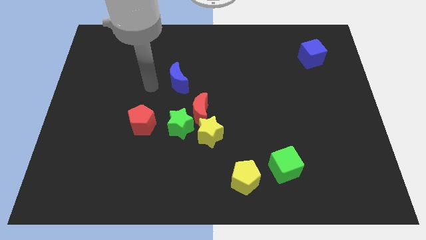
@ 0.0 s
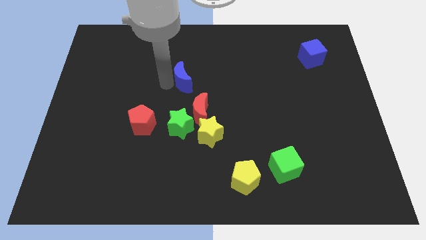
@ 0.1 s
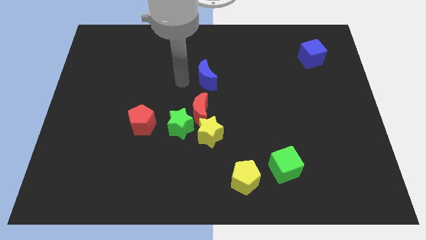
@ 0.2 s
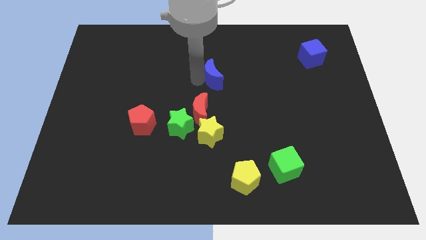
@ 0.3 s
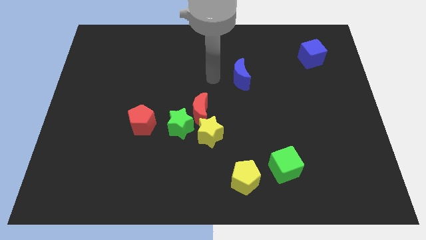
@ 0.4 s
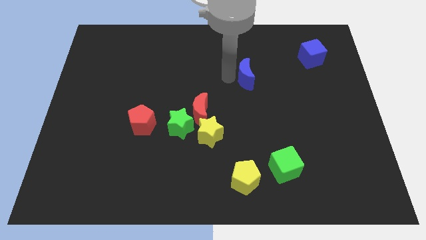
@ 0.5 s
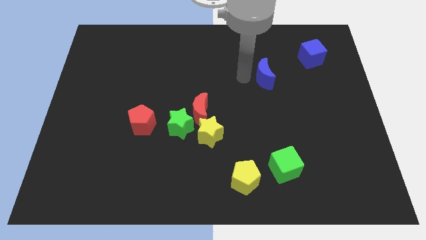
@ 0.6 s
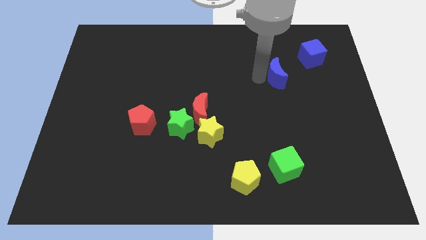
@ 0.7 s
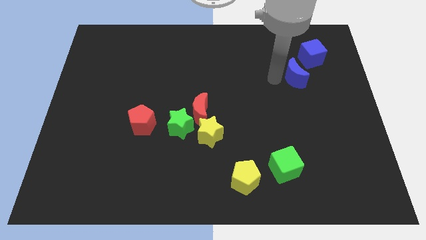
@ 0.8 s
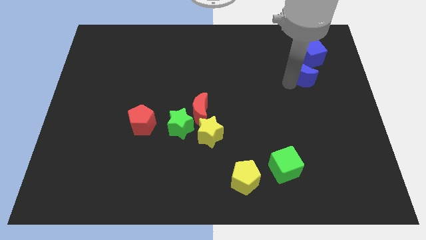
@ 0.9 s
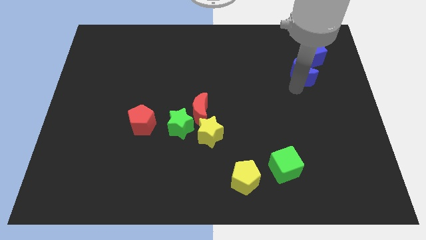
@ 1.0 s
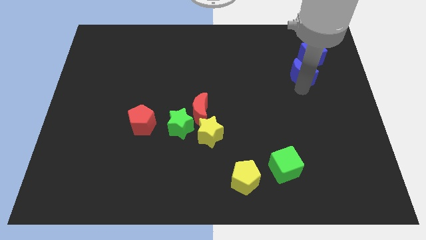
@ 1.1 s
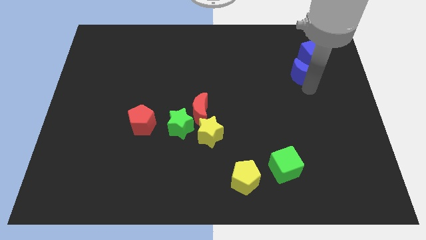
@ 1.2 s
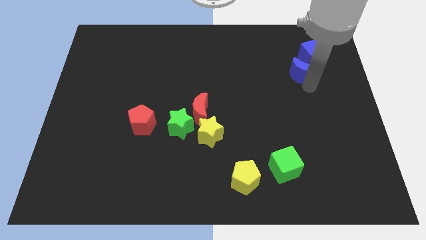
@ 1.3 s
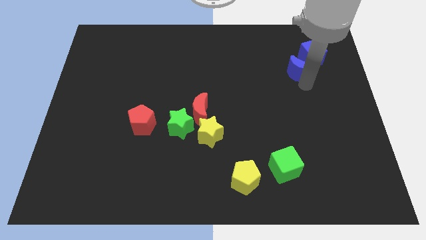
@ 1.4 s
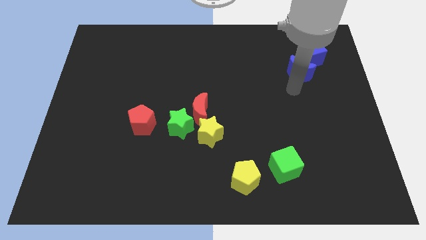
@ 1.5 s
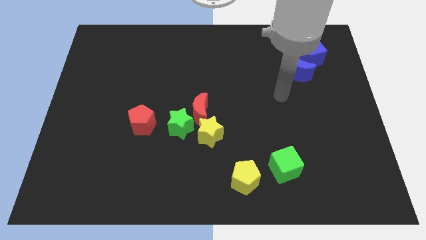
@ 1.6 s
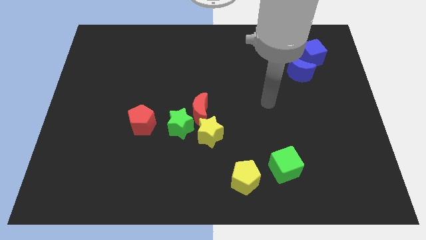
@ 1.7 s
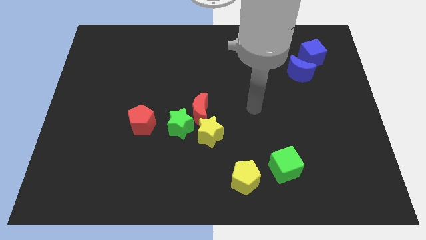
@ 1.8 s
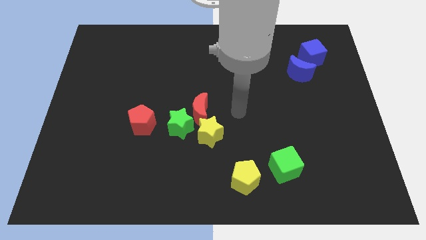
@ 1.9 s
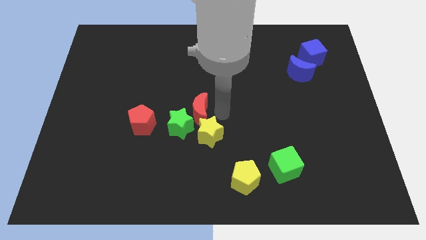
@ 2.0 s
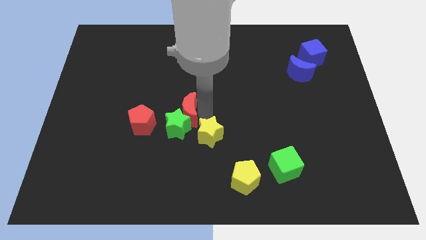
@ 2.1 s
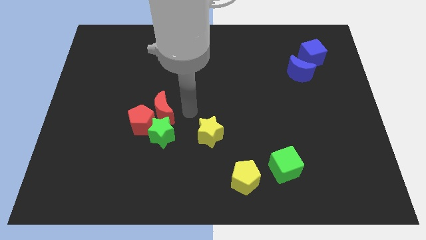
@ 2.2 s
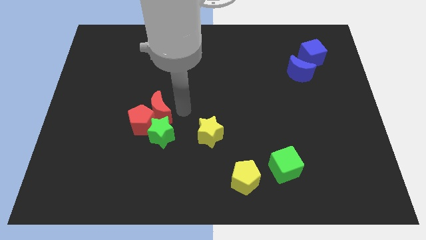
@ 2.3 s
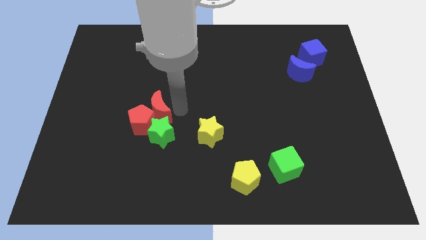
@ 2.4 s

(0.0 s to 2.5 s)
push blue moon in to blue cube

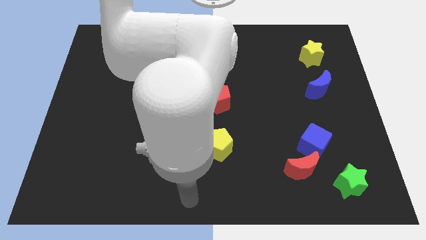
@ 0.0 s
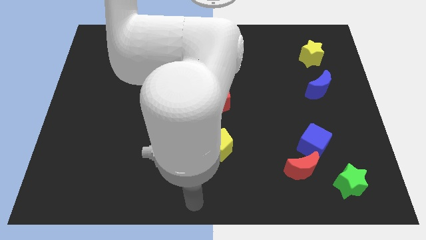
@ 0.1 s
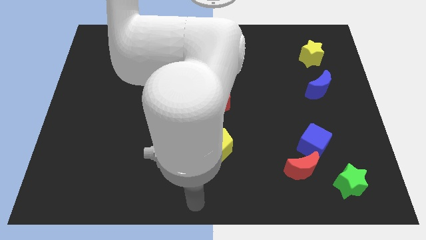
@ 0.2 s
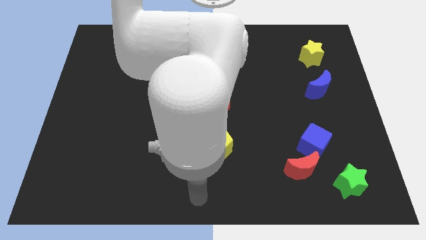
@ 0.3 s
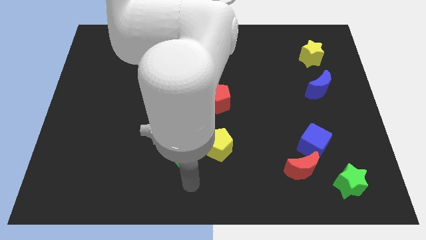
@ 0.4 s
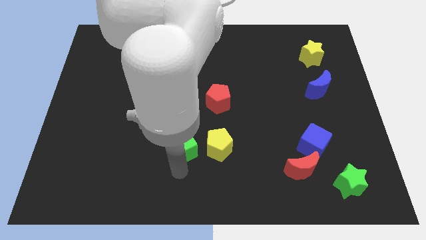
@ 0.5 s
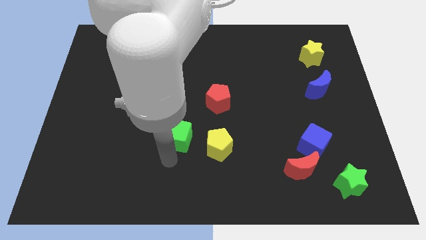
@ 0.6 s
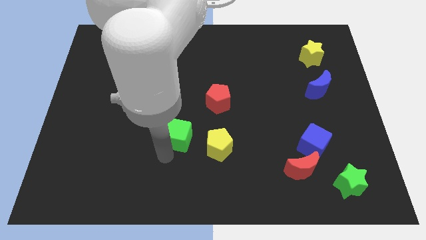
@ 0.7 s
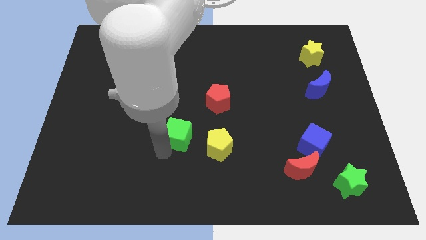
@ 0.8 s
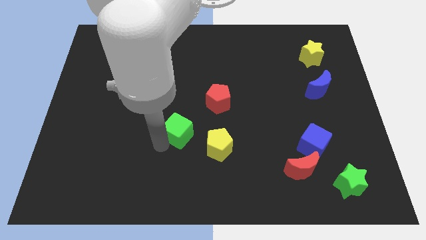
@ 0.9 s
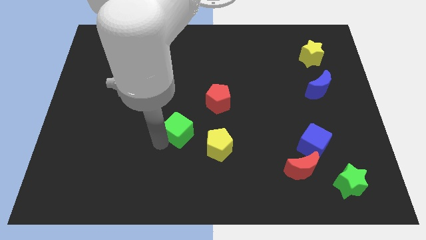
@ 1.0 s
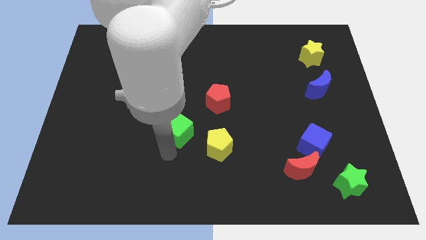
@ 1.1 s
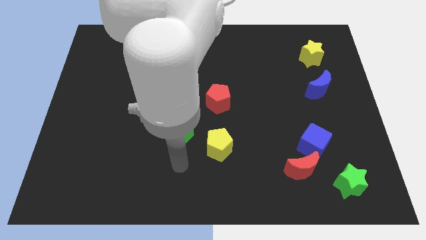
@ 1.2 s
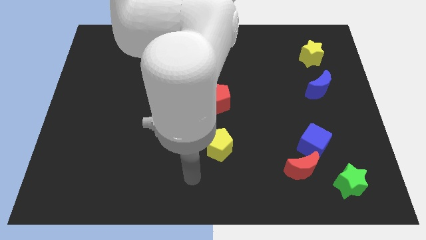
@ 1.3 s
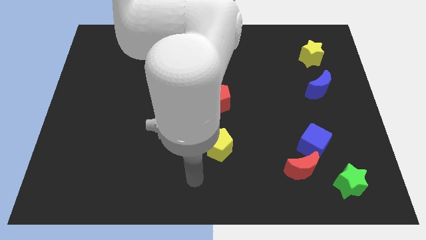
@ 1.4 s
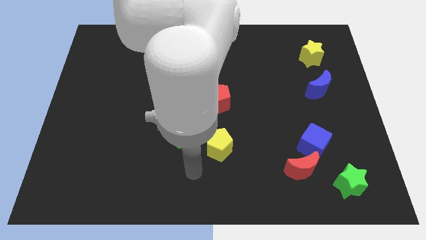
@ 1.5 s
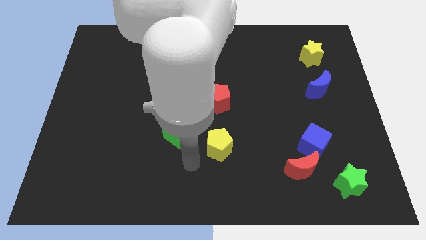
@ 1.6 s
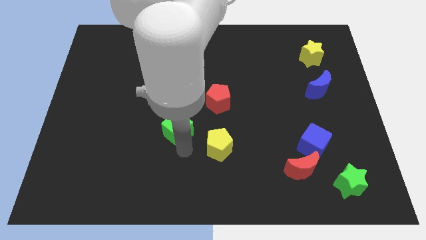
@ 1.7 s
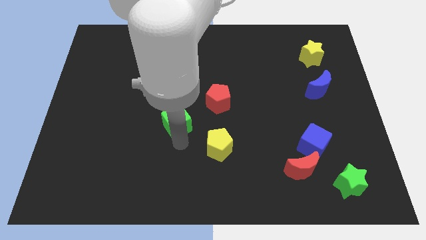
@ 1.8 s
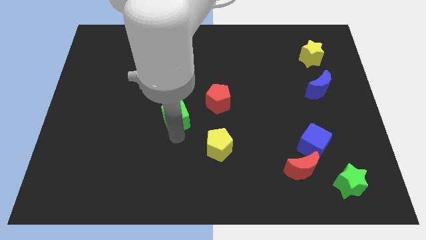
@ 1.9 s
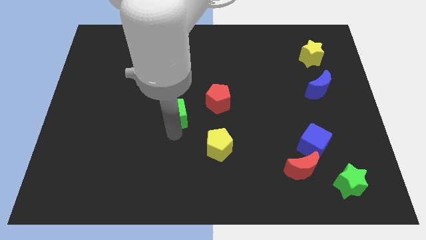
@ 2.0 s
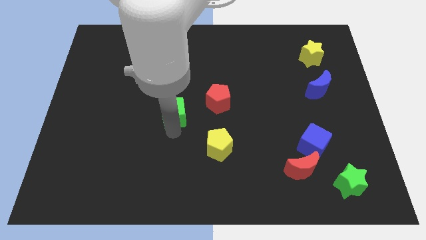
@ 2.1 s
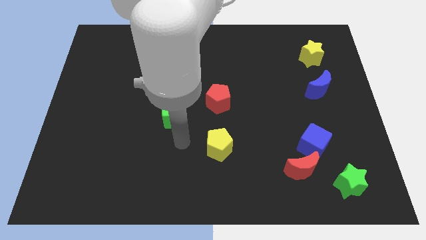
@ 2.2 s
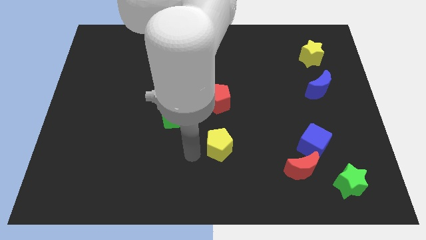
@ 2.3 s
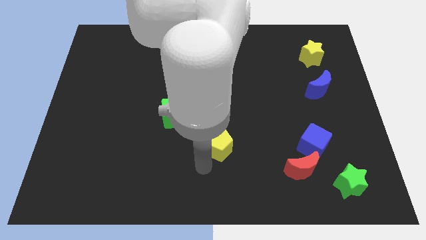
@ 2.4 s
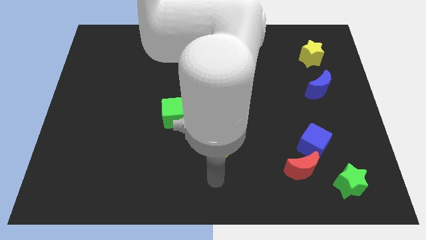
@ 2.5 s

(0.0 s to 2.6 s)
move the green cube to the left of the red pentagon

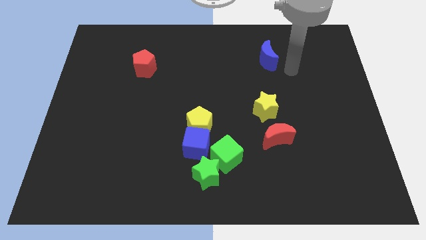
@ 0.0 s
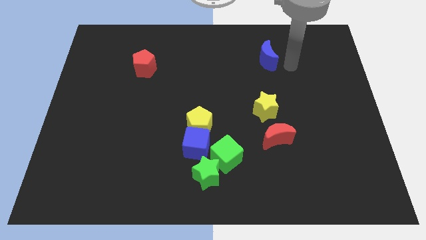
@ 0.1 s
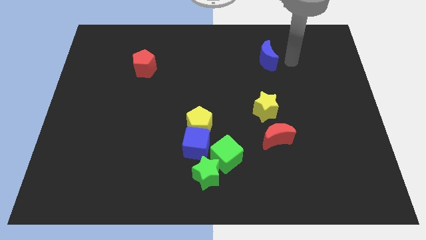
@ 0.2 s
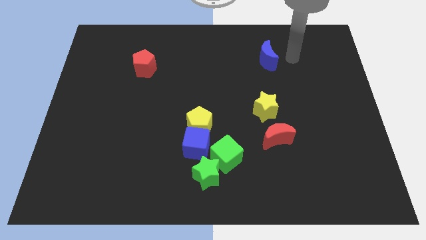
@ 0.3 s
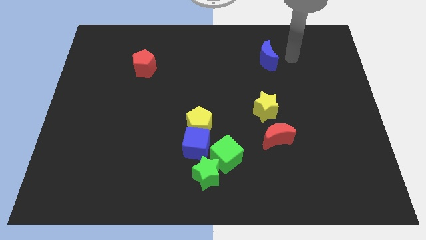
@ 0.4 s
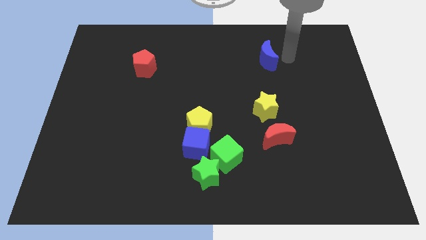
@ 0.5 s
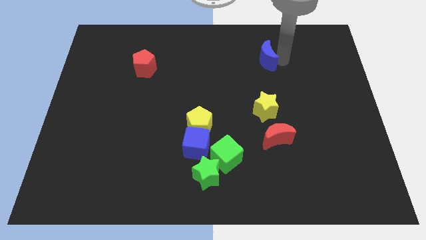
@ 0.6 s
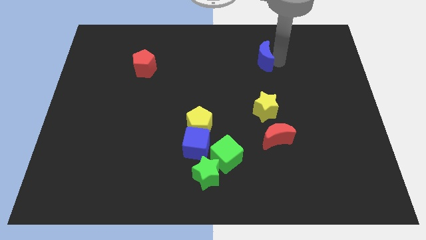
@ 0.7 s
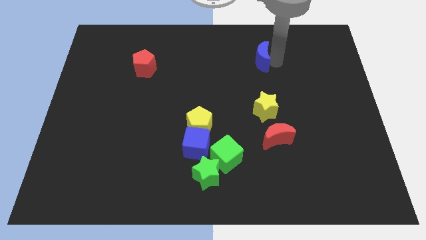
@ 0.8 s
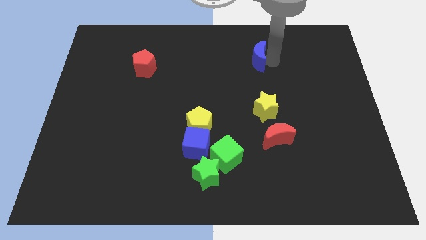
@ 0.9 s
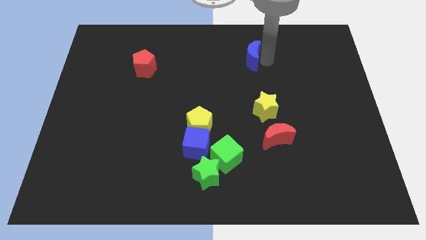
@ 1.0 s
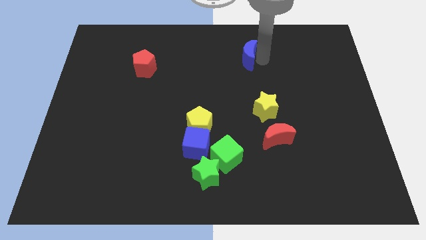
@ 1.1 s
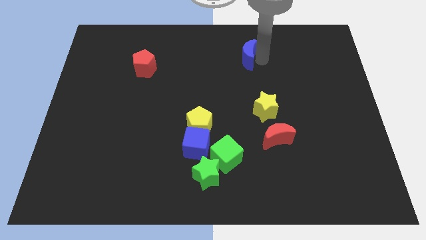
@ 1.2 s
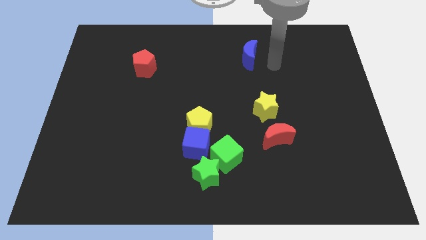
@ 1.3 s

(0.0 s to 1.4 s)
push the blue crescent slightly towards the red pentagon

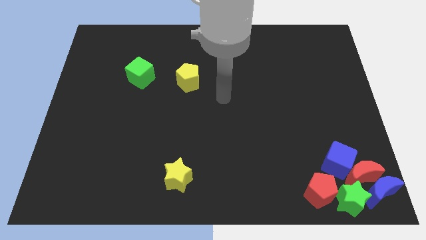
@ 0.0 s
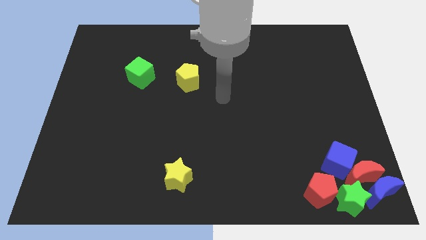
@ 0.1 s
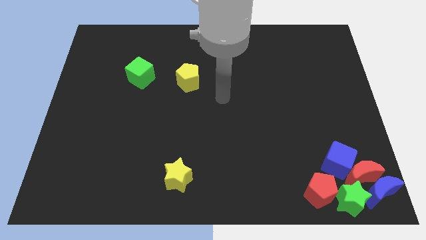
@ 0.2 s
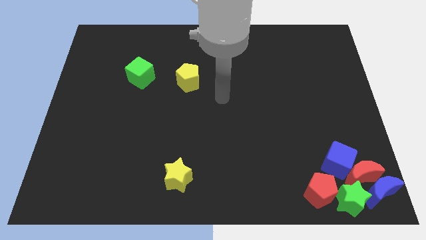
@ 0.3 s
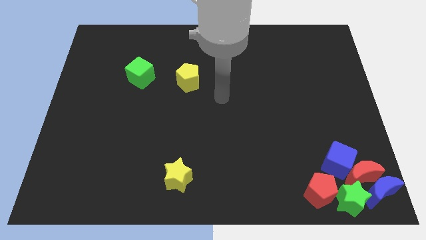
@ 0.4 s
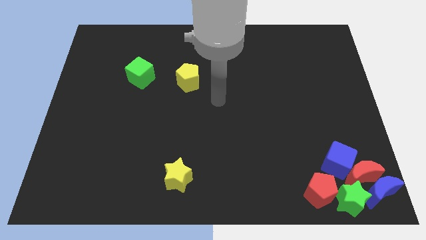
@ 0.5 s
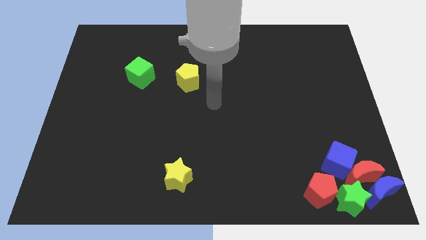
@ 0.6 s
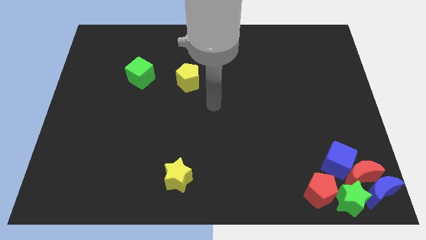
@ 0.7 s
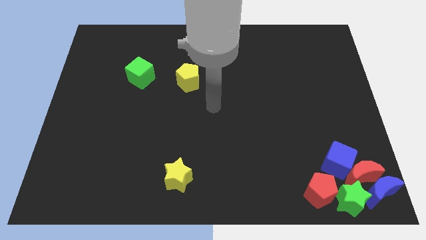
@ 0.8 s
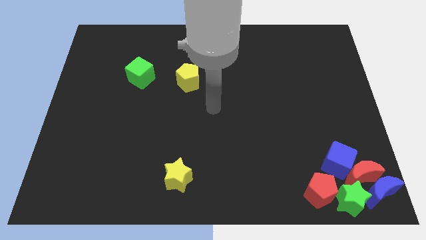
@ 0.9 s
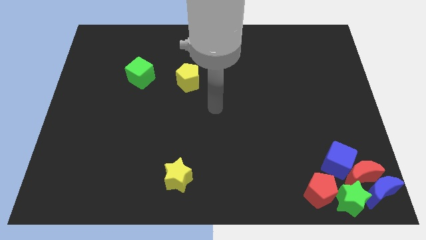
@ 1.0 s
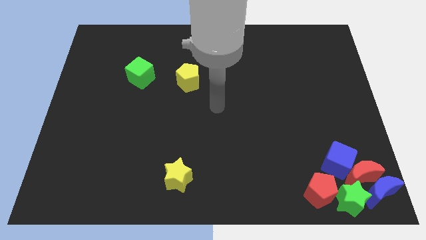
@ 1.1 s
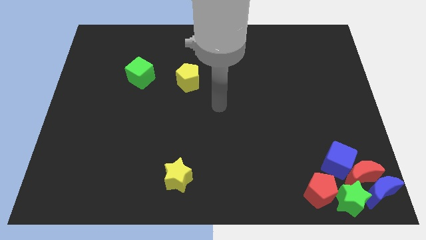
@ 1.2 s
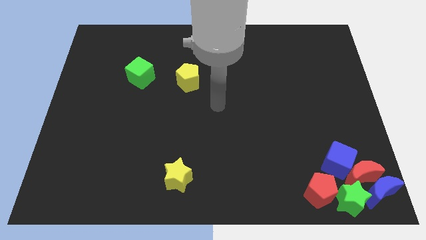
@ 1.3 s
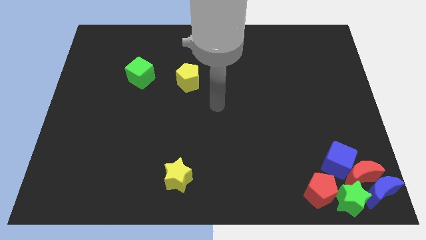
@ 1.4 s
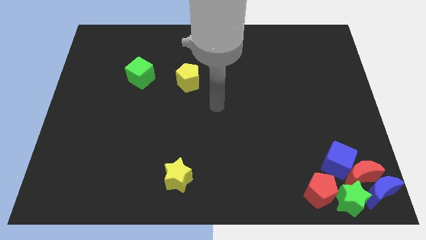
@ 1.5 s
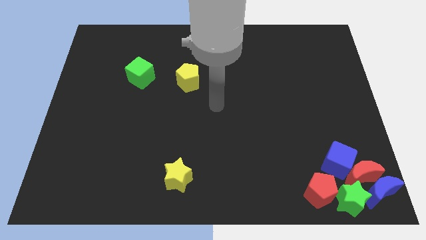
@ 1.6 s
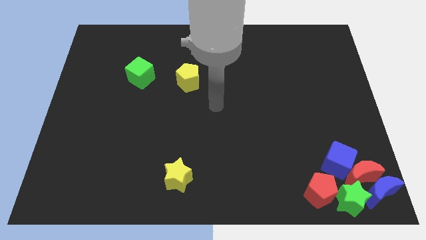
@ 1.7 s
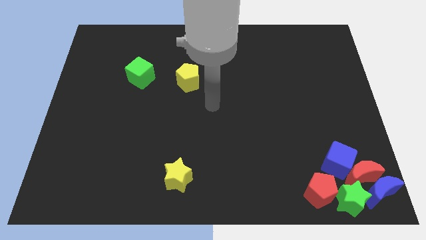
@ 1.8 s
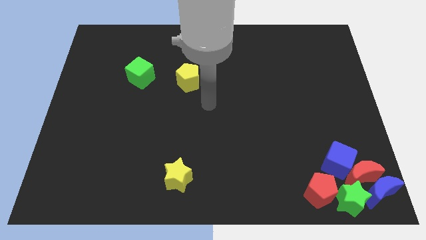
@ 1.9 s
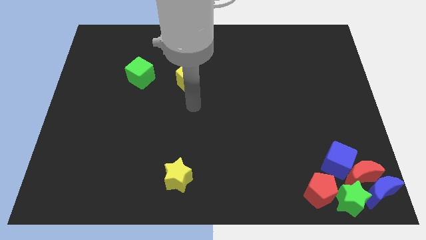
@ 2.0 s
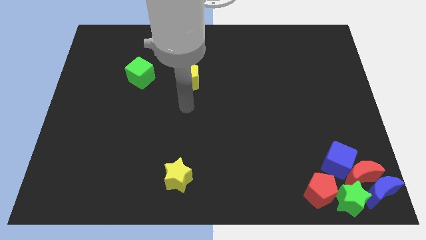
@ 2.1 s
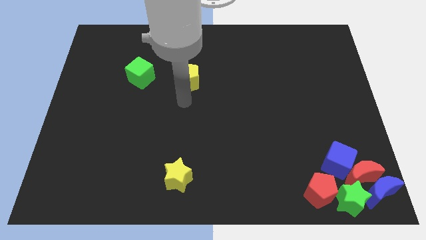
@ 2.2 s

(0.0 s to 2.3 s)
point your arm at the bottom of the yellow pentagon

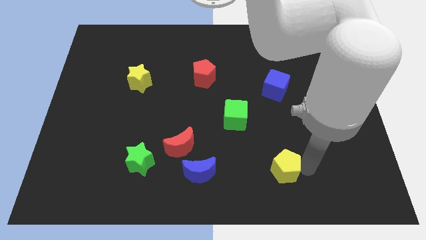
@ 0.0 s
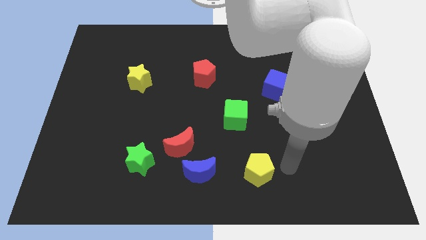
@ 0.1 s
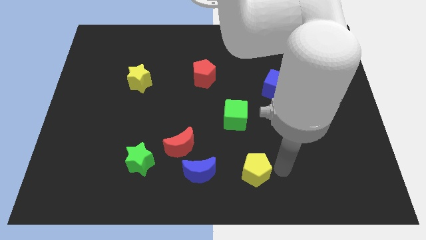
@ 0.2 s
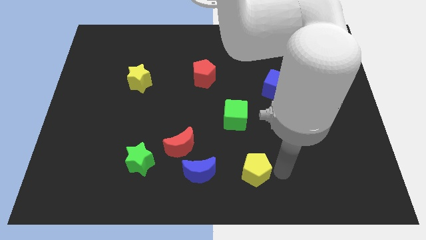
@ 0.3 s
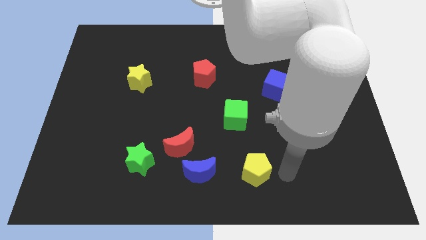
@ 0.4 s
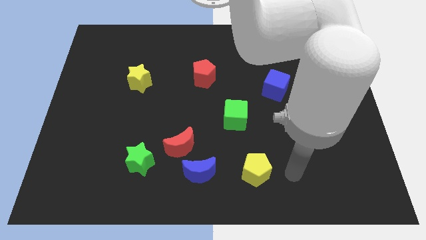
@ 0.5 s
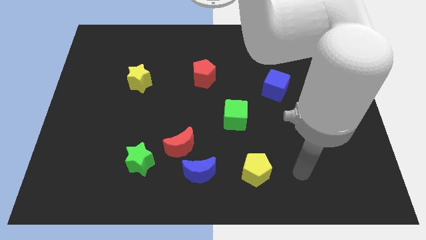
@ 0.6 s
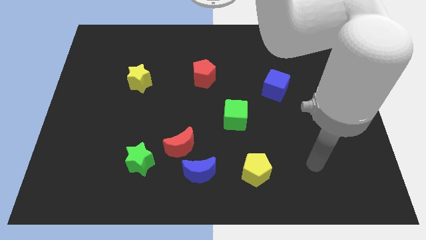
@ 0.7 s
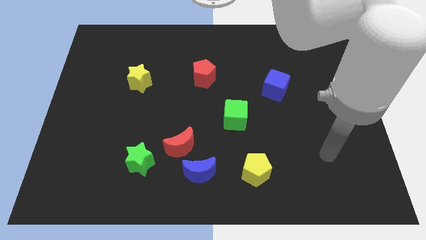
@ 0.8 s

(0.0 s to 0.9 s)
place yellow pentagon below green cube
